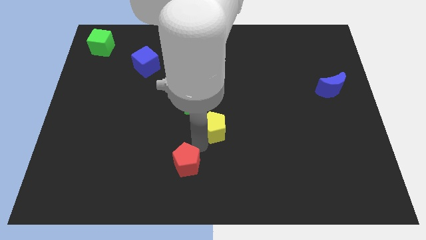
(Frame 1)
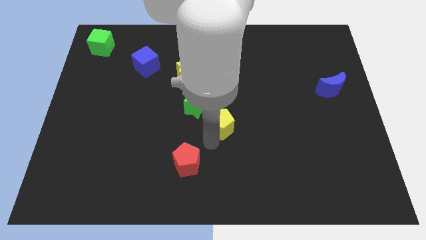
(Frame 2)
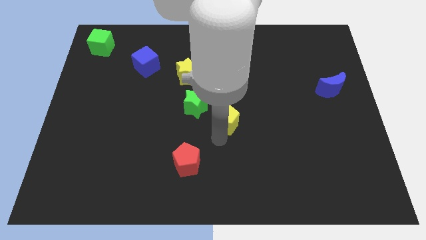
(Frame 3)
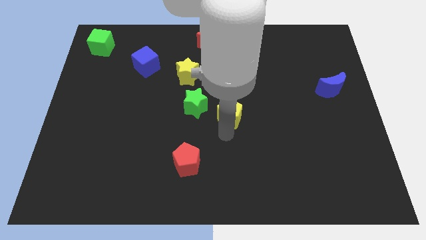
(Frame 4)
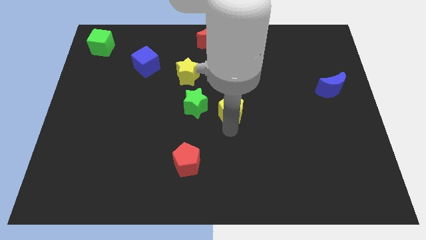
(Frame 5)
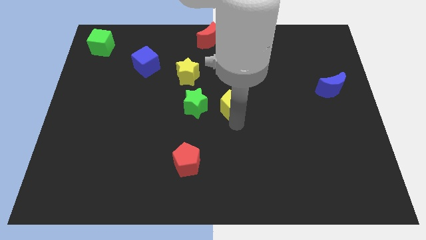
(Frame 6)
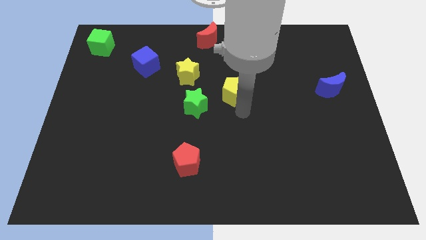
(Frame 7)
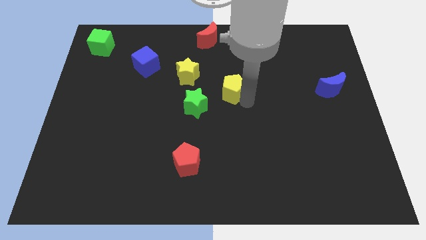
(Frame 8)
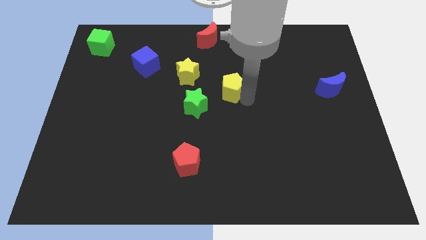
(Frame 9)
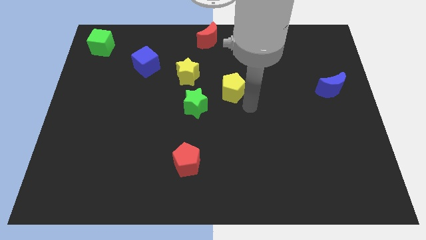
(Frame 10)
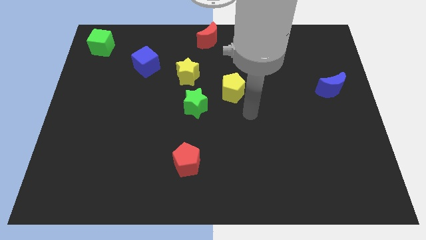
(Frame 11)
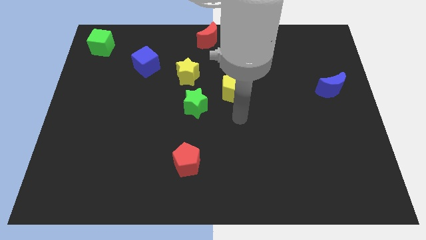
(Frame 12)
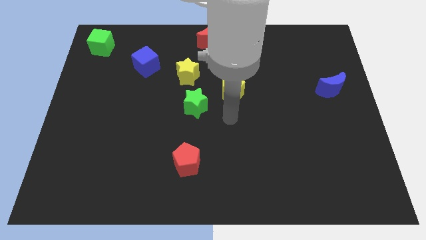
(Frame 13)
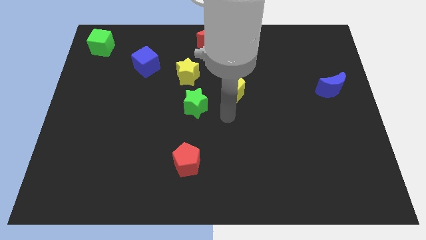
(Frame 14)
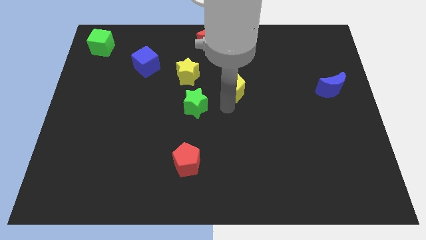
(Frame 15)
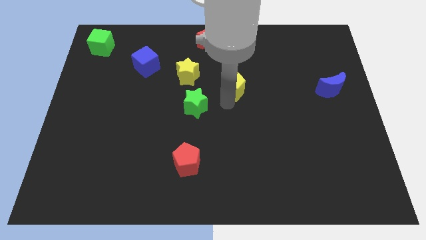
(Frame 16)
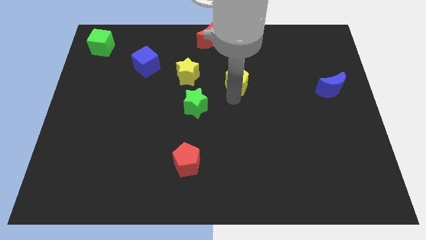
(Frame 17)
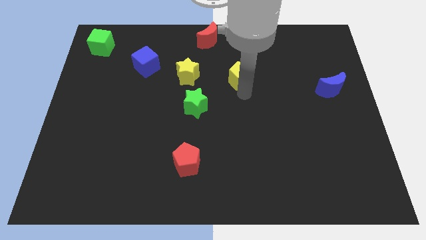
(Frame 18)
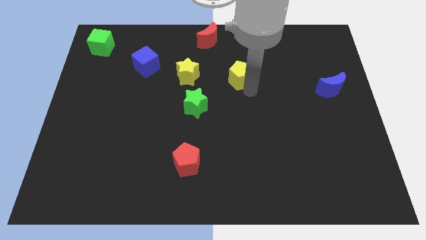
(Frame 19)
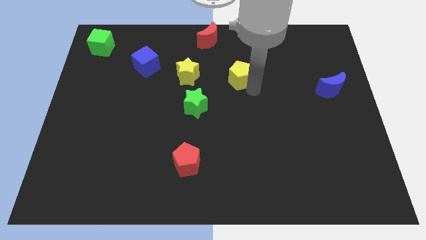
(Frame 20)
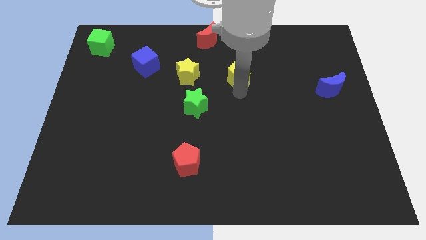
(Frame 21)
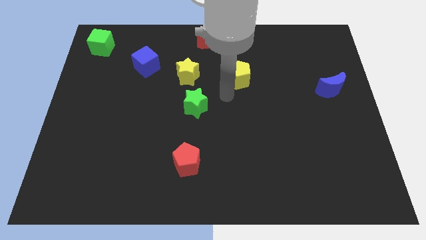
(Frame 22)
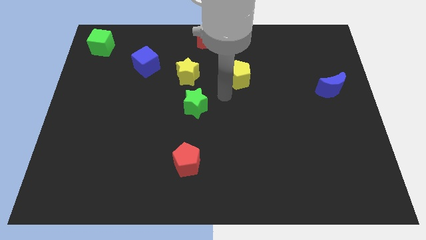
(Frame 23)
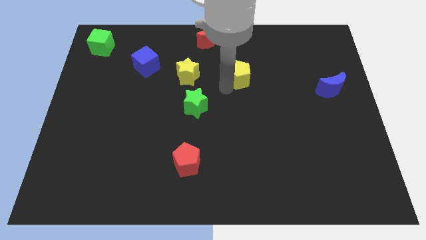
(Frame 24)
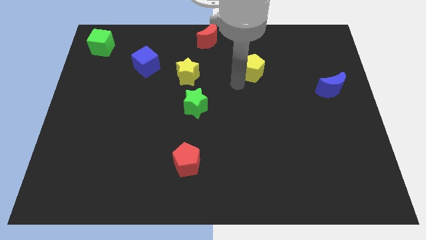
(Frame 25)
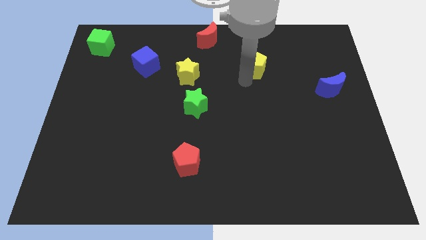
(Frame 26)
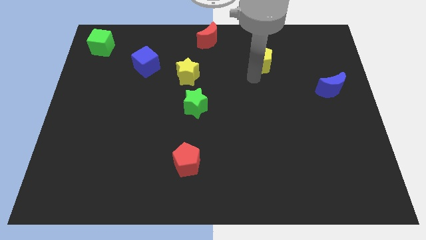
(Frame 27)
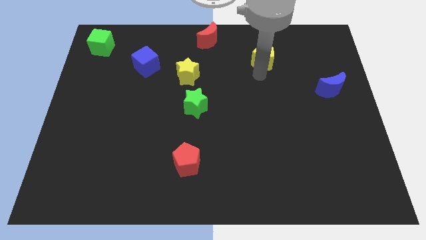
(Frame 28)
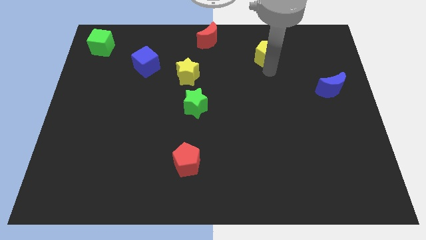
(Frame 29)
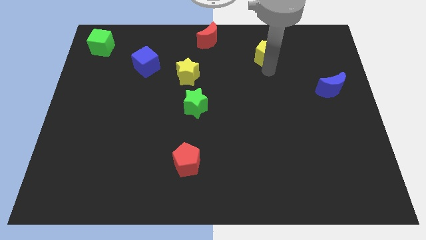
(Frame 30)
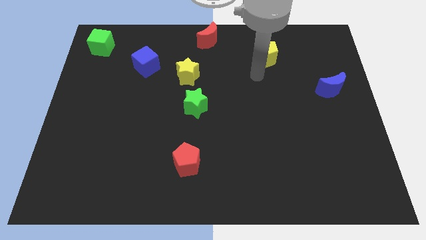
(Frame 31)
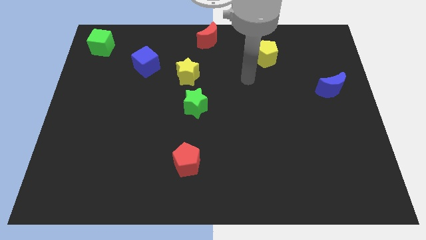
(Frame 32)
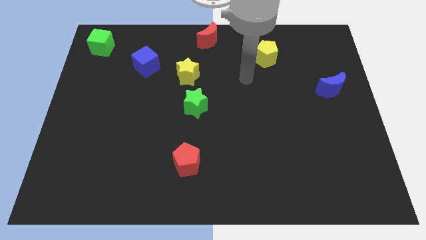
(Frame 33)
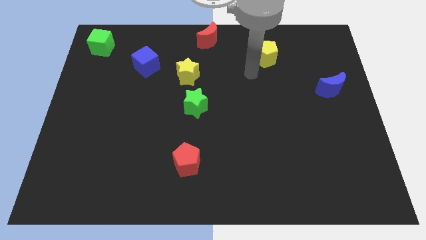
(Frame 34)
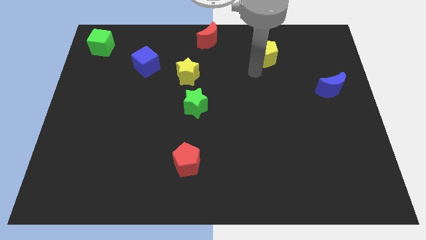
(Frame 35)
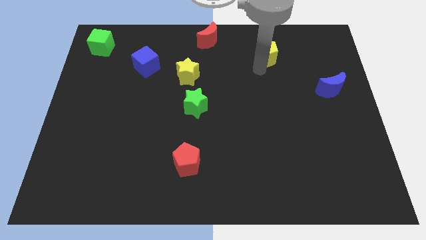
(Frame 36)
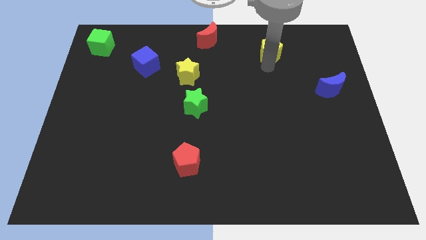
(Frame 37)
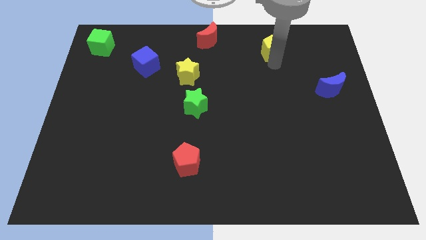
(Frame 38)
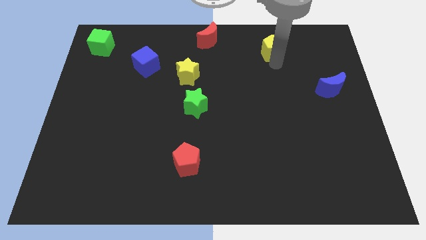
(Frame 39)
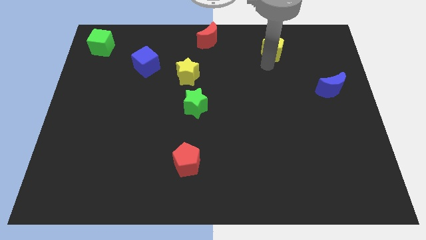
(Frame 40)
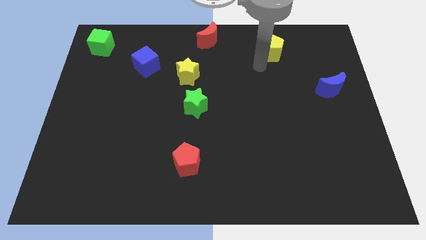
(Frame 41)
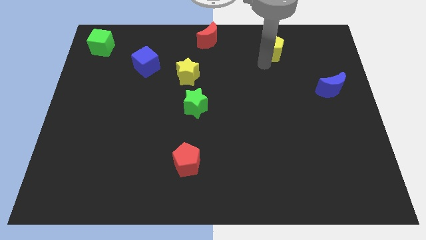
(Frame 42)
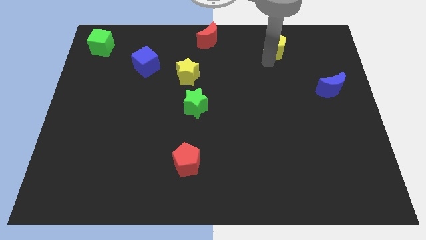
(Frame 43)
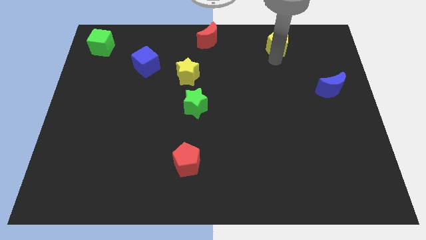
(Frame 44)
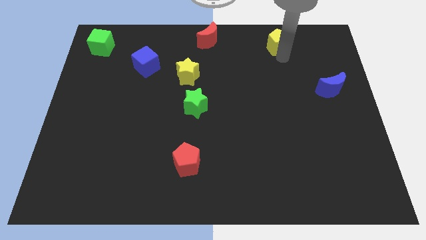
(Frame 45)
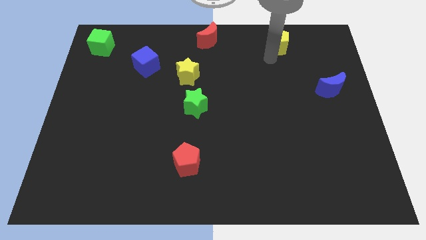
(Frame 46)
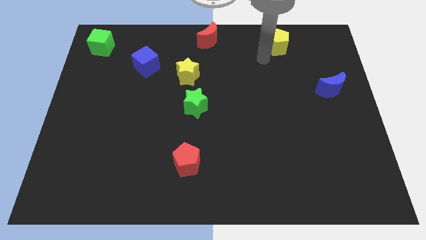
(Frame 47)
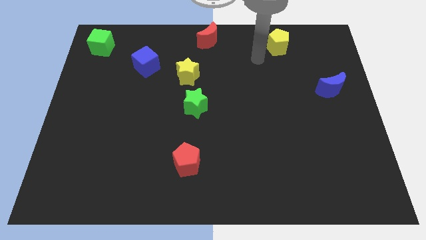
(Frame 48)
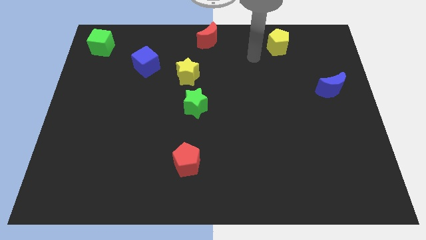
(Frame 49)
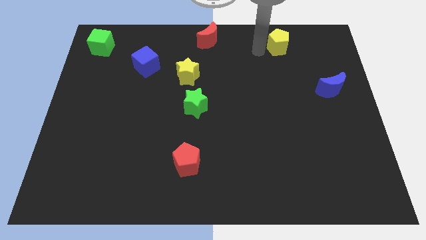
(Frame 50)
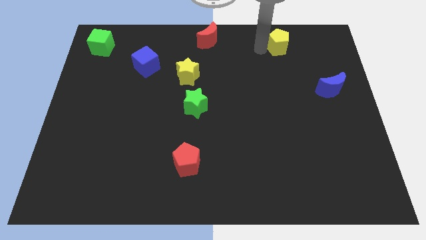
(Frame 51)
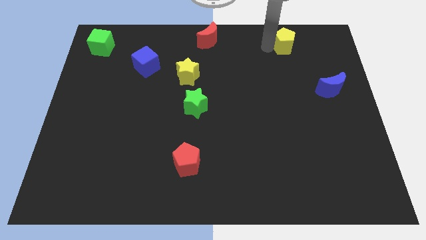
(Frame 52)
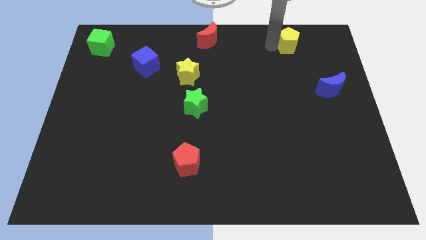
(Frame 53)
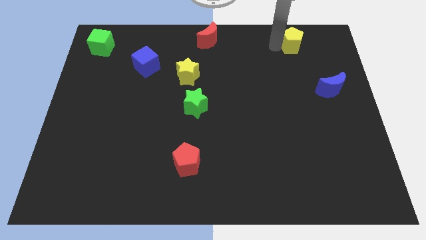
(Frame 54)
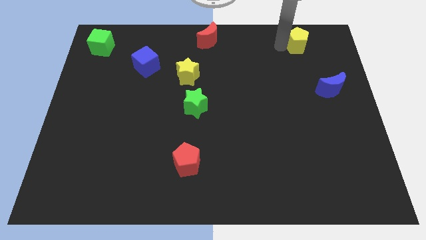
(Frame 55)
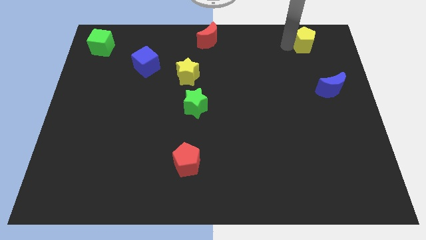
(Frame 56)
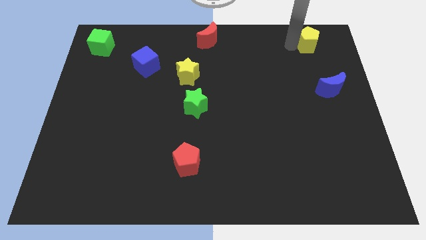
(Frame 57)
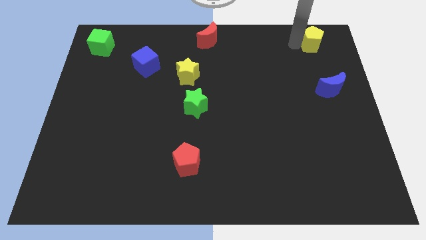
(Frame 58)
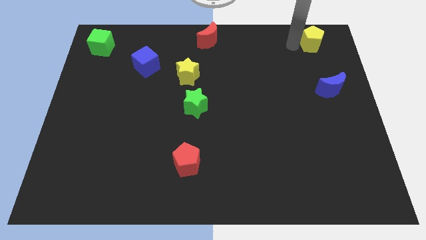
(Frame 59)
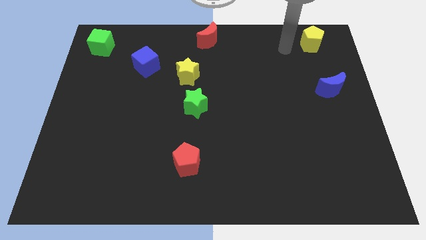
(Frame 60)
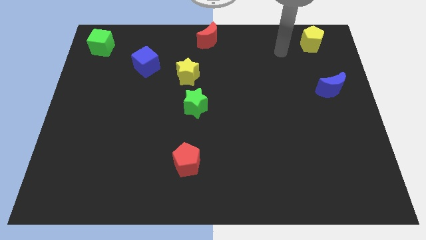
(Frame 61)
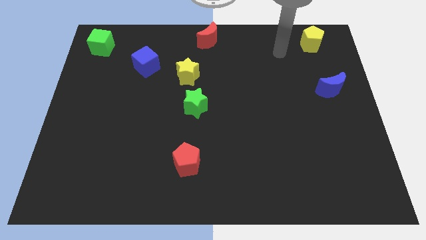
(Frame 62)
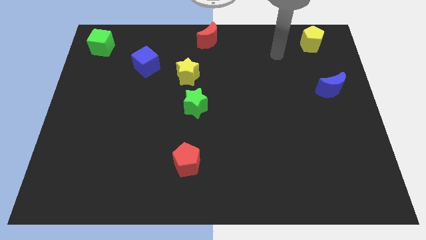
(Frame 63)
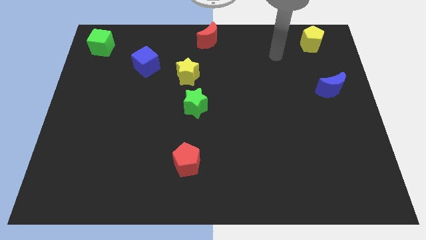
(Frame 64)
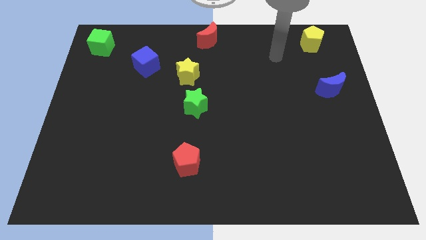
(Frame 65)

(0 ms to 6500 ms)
move the yellow pentagon towards the top right side of the board

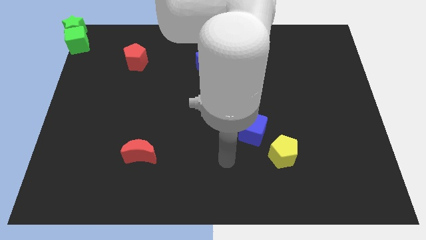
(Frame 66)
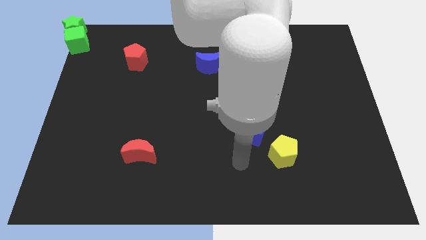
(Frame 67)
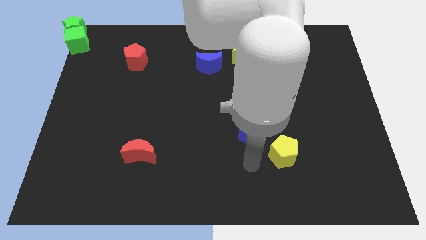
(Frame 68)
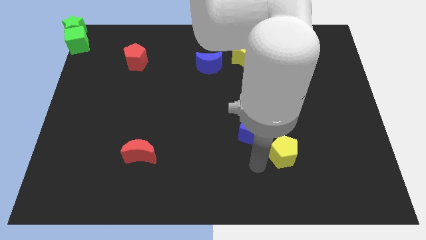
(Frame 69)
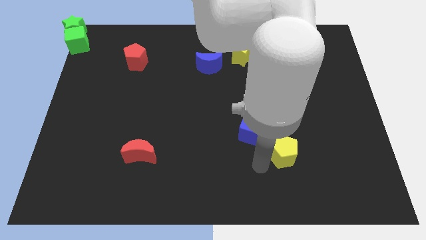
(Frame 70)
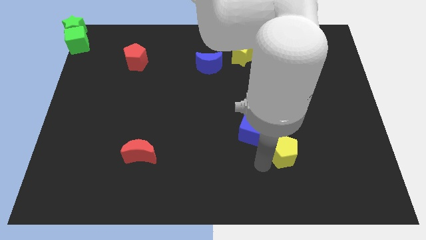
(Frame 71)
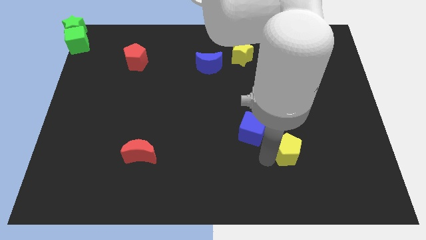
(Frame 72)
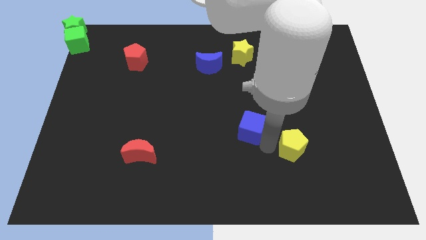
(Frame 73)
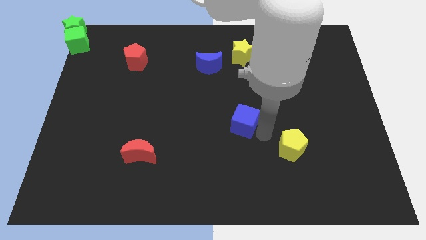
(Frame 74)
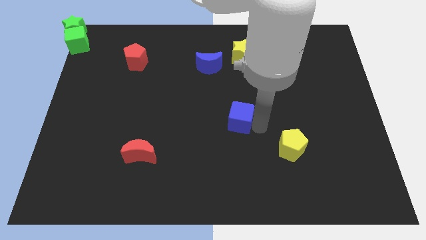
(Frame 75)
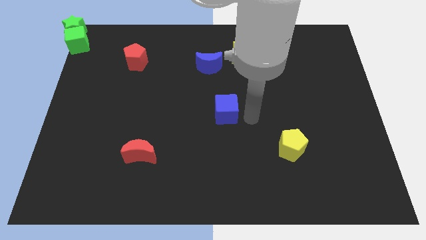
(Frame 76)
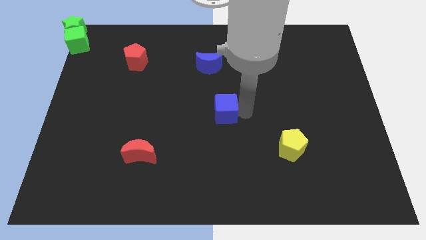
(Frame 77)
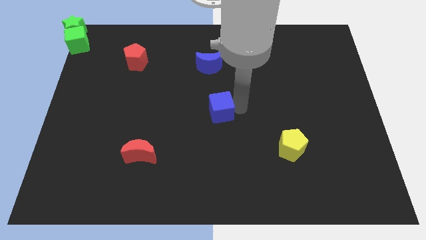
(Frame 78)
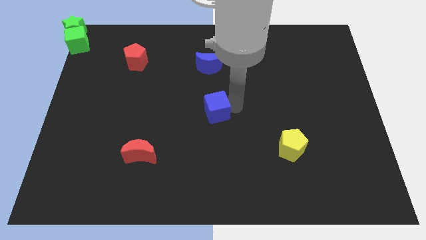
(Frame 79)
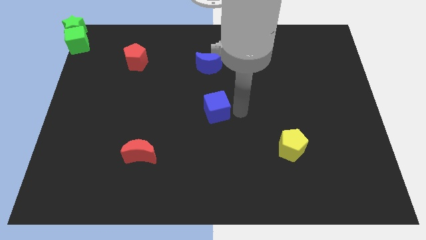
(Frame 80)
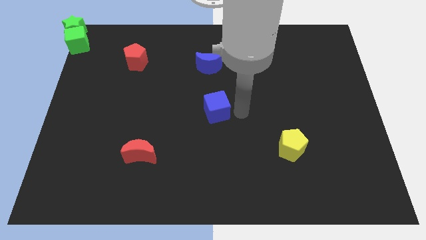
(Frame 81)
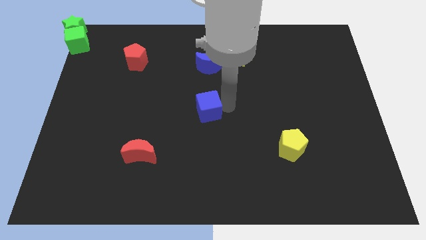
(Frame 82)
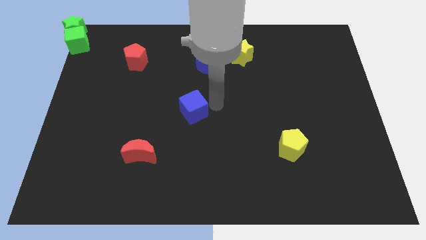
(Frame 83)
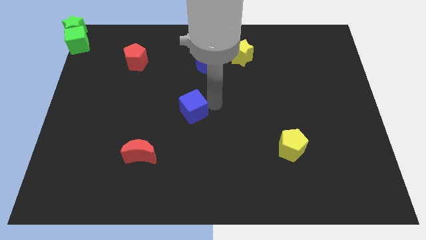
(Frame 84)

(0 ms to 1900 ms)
separate the blue cube from the yellow pentagon

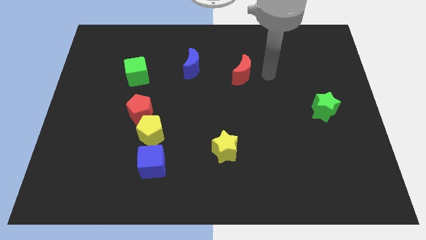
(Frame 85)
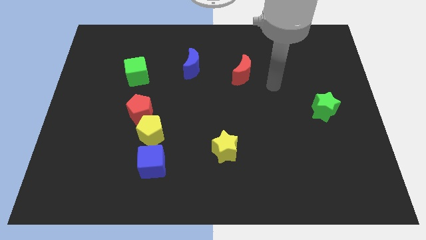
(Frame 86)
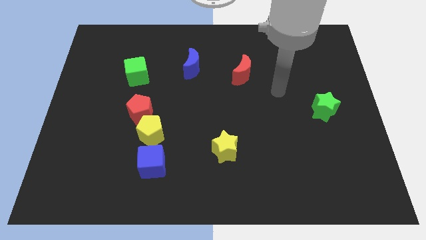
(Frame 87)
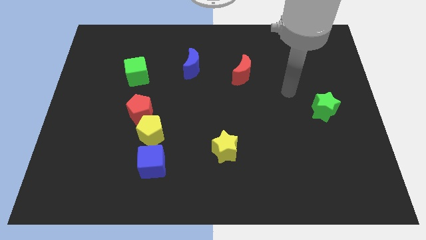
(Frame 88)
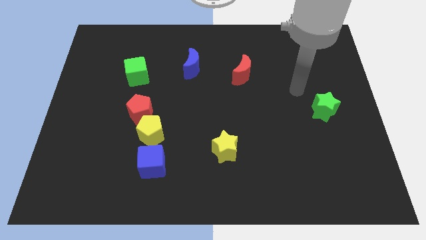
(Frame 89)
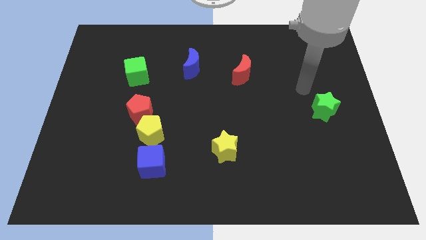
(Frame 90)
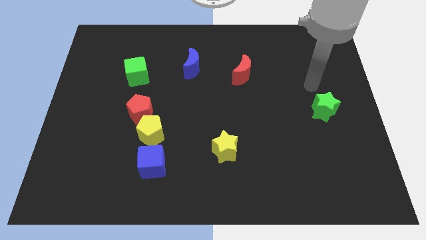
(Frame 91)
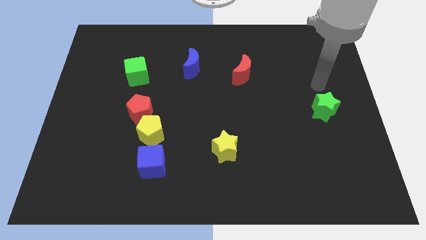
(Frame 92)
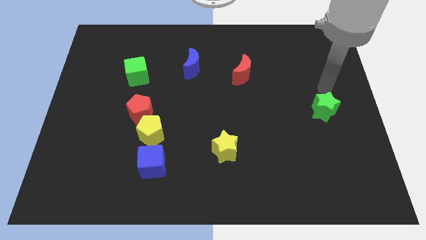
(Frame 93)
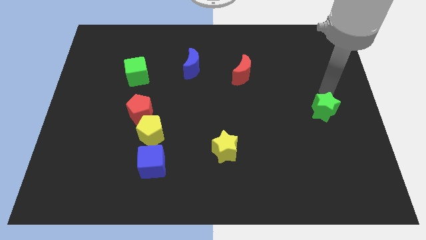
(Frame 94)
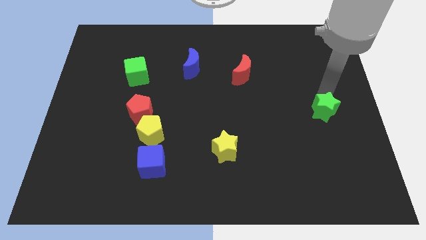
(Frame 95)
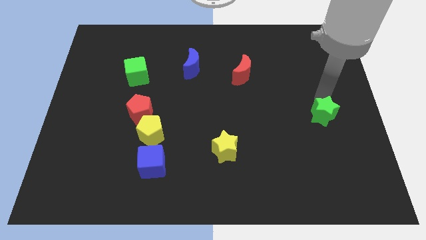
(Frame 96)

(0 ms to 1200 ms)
place your hand top of green star
